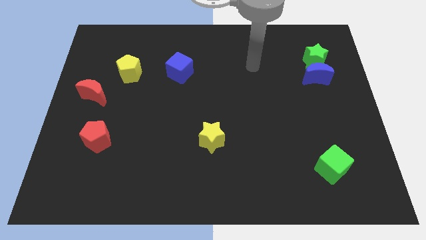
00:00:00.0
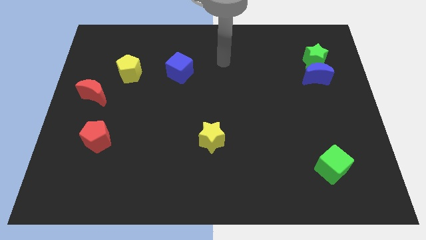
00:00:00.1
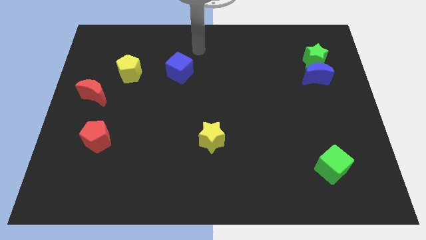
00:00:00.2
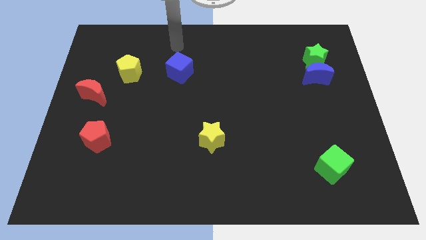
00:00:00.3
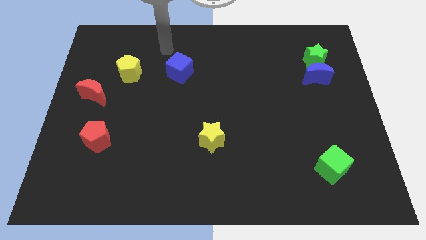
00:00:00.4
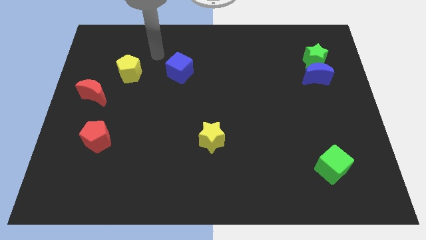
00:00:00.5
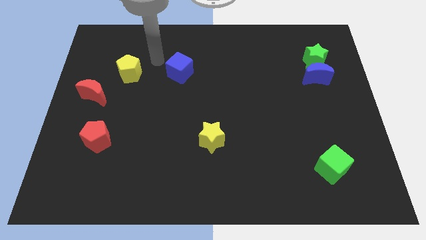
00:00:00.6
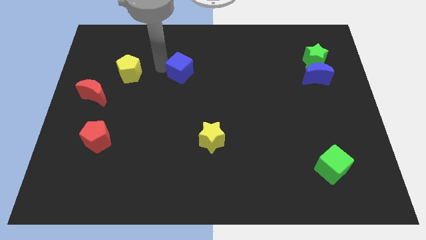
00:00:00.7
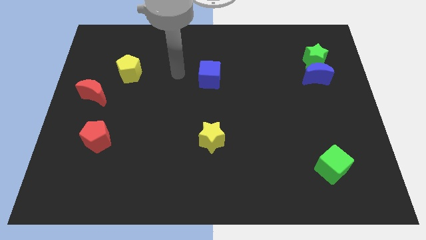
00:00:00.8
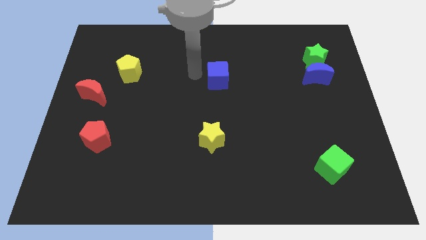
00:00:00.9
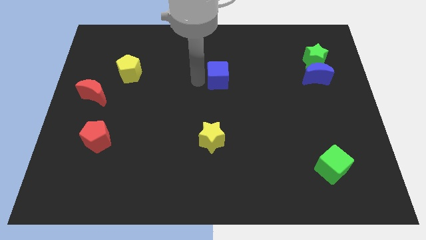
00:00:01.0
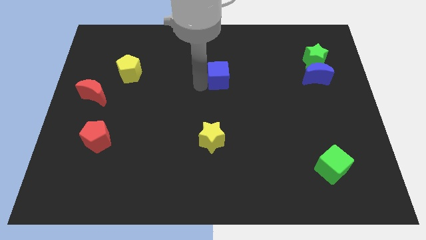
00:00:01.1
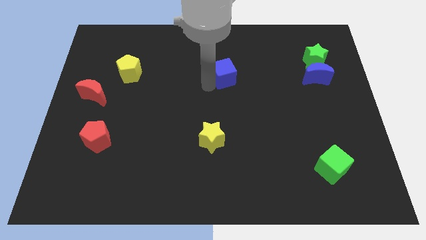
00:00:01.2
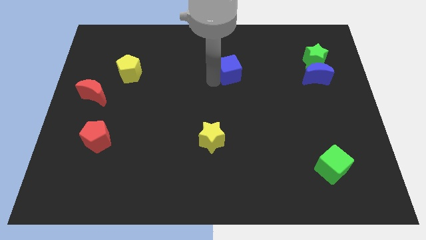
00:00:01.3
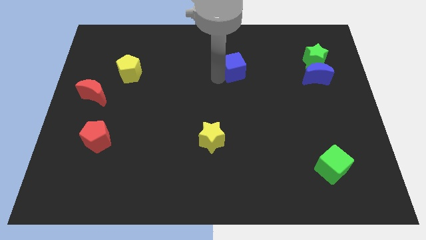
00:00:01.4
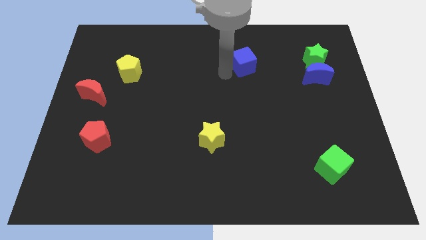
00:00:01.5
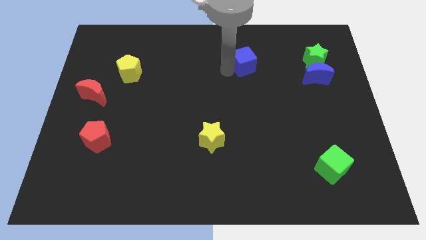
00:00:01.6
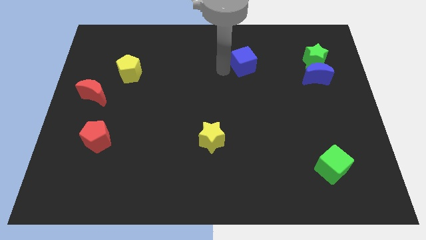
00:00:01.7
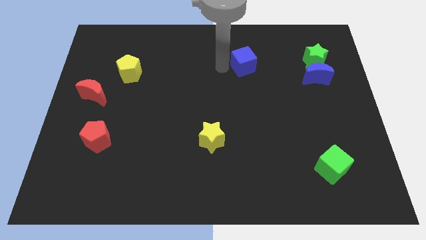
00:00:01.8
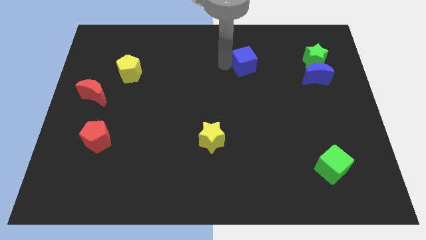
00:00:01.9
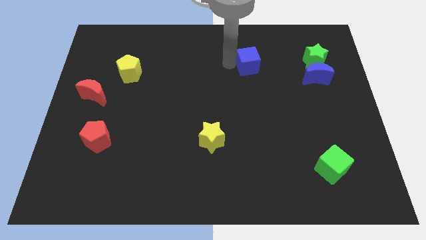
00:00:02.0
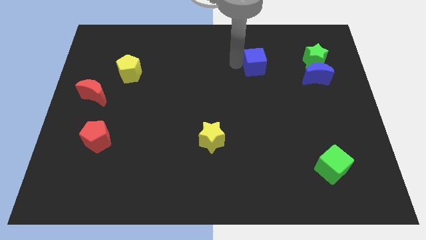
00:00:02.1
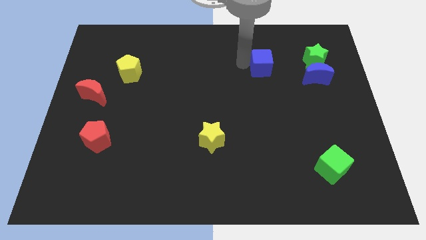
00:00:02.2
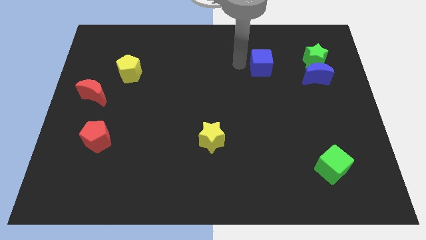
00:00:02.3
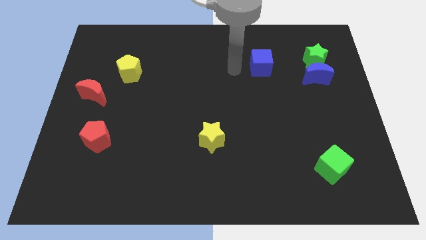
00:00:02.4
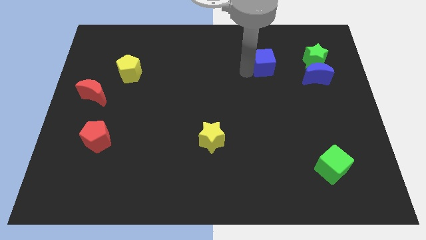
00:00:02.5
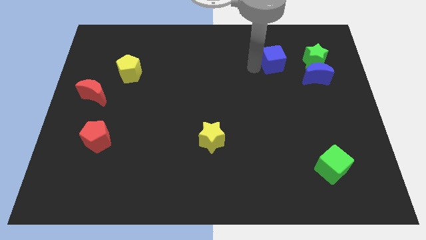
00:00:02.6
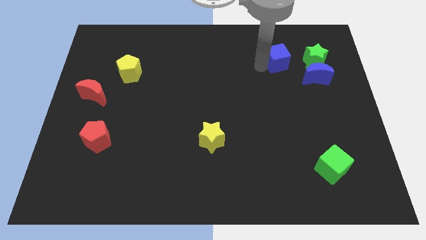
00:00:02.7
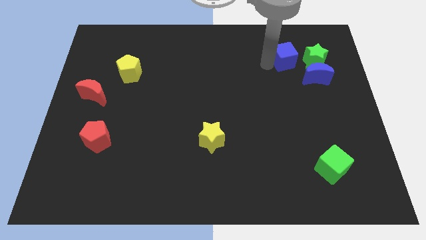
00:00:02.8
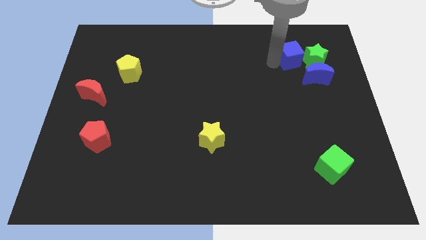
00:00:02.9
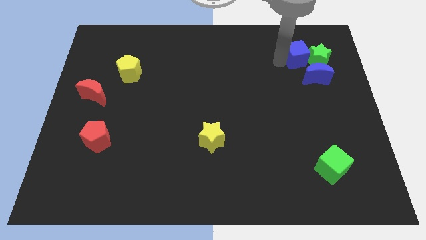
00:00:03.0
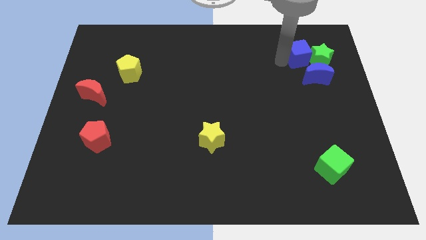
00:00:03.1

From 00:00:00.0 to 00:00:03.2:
move the blue cube next to the green star

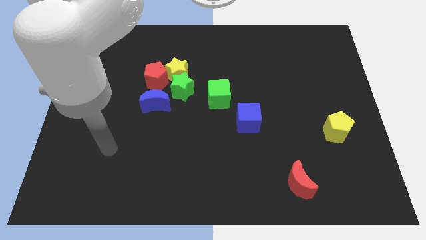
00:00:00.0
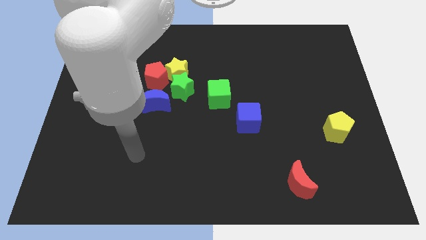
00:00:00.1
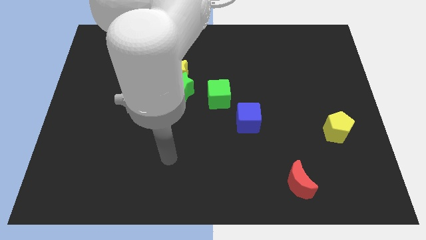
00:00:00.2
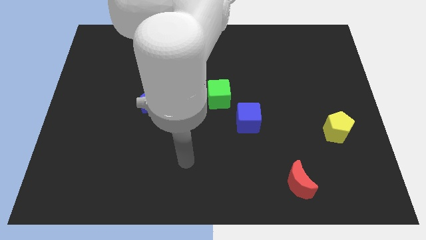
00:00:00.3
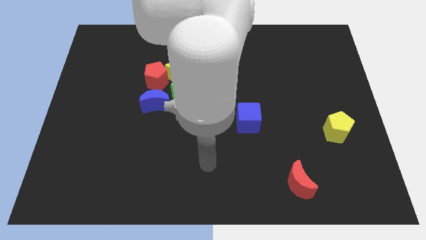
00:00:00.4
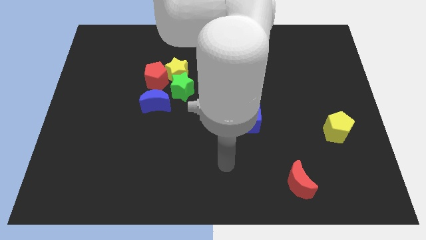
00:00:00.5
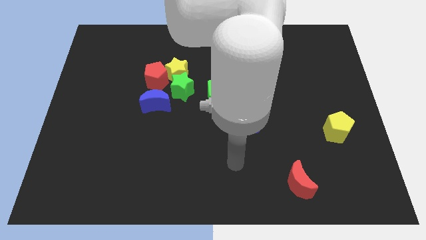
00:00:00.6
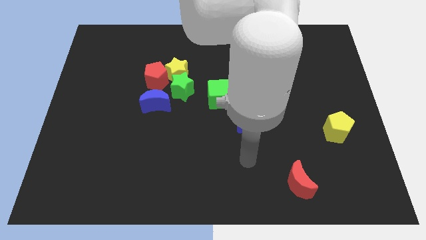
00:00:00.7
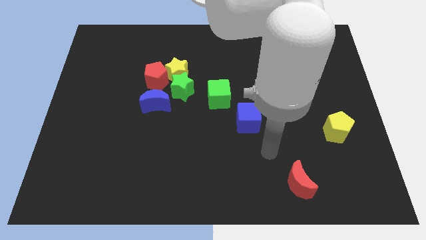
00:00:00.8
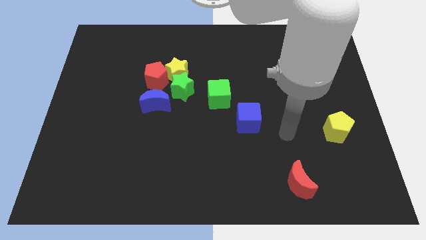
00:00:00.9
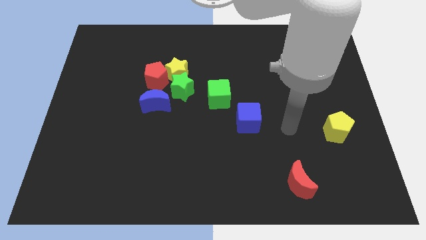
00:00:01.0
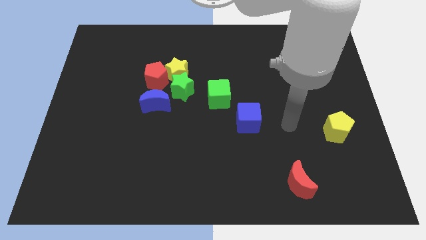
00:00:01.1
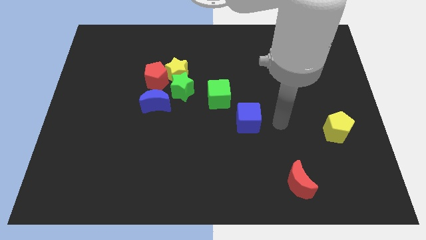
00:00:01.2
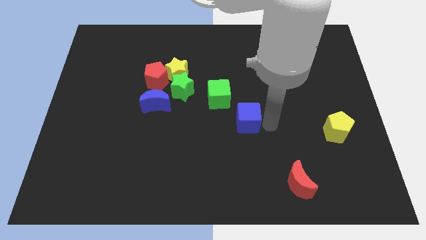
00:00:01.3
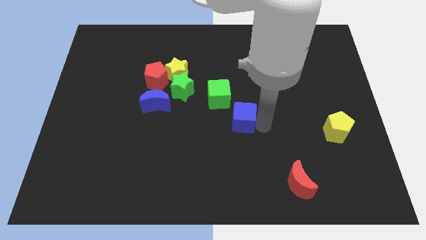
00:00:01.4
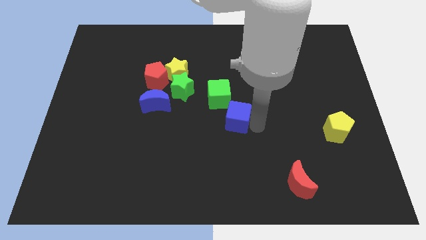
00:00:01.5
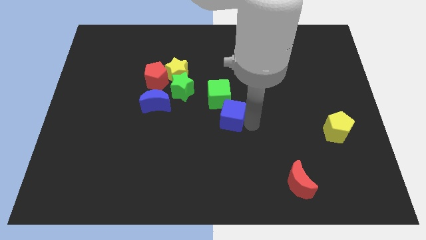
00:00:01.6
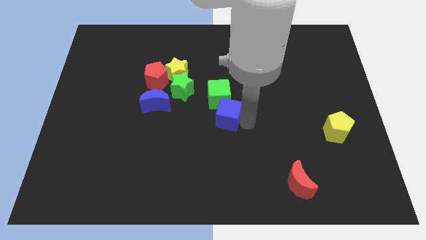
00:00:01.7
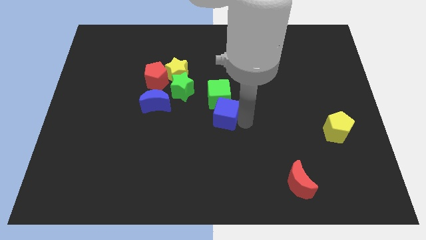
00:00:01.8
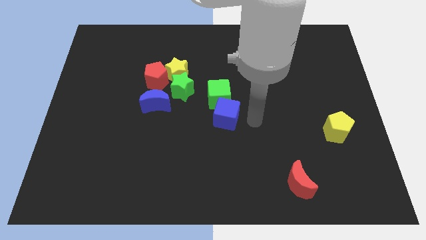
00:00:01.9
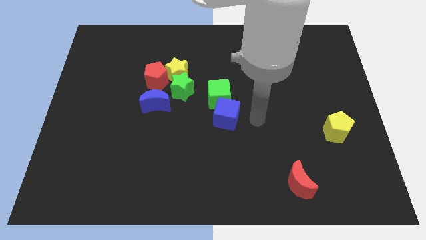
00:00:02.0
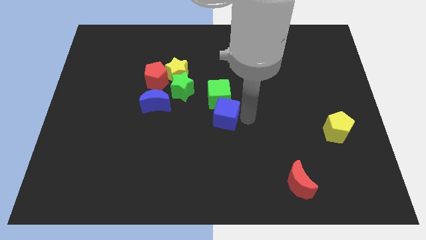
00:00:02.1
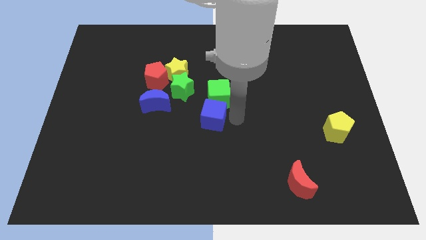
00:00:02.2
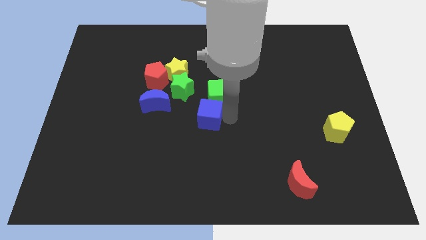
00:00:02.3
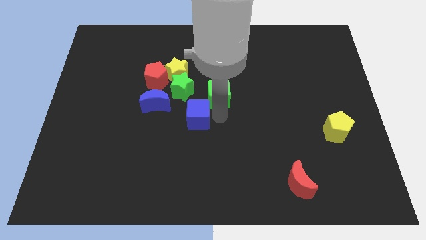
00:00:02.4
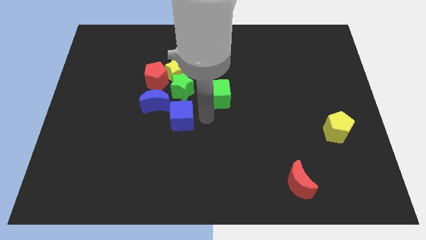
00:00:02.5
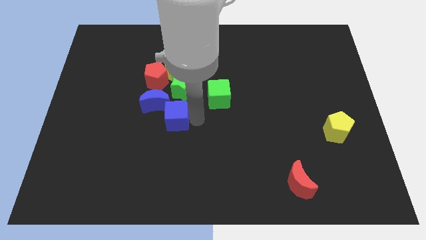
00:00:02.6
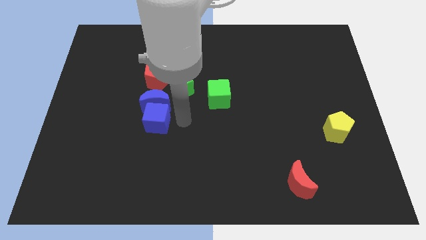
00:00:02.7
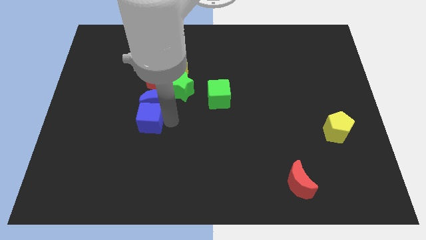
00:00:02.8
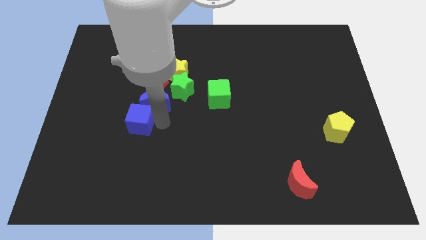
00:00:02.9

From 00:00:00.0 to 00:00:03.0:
move the blue cube close to the blue moon

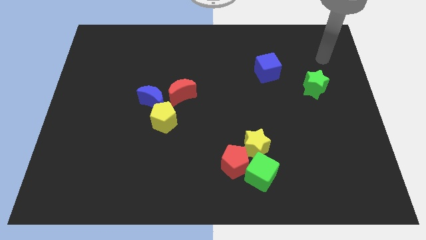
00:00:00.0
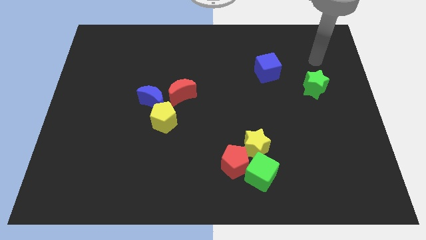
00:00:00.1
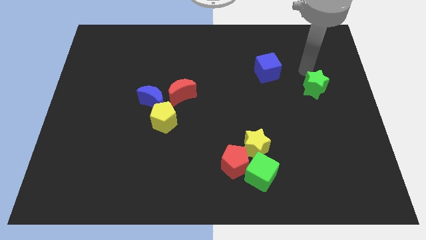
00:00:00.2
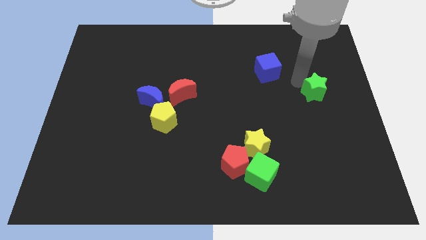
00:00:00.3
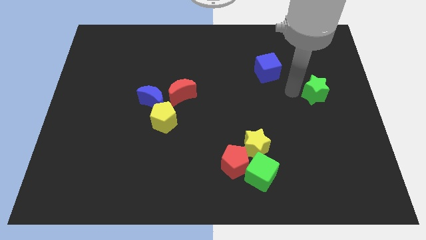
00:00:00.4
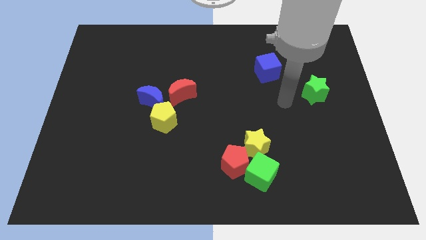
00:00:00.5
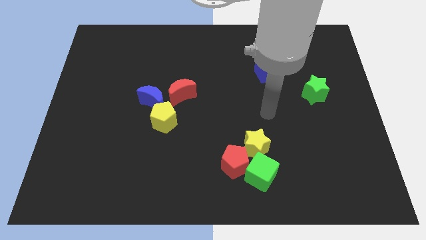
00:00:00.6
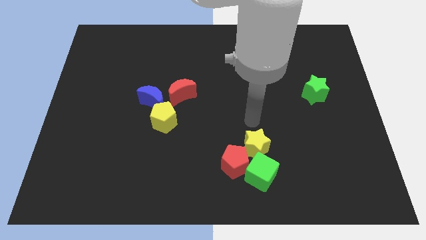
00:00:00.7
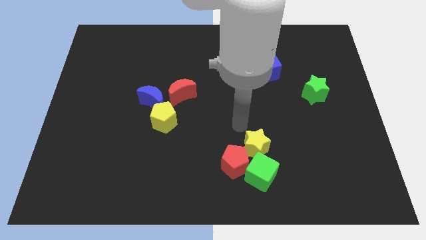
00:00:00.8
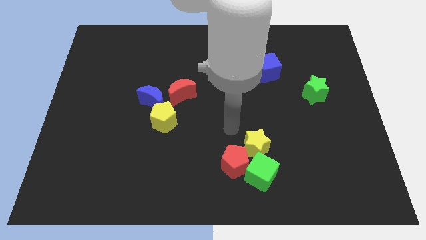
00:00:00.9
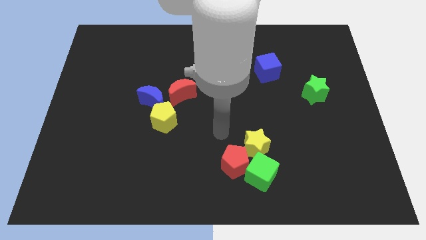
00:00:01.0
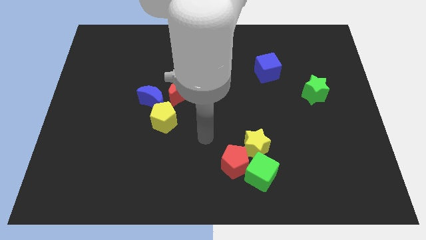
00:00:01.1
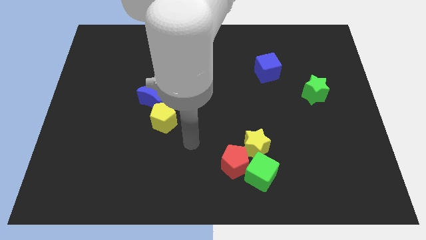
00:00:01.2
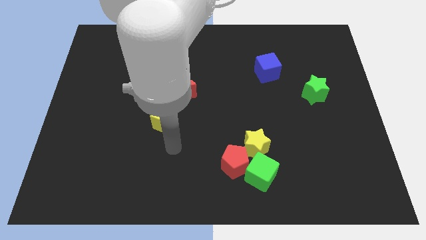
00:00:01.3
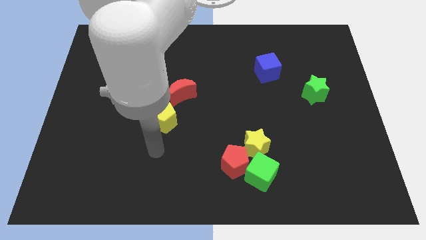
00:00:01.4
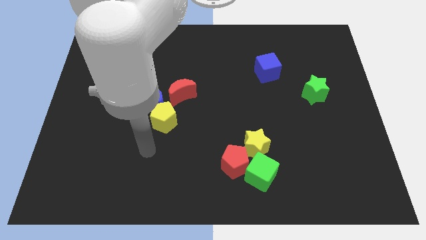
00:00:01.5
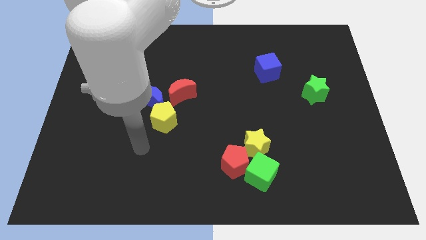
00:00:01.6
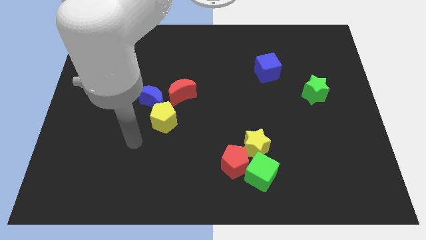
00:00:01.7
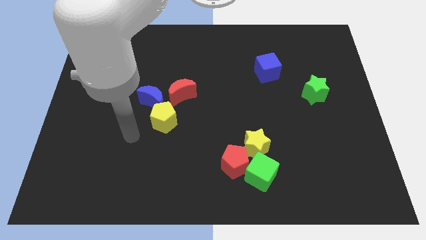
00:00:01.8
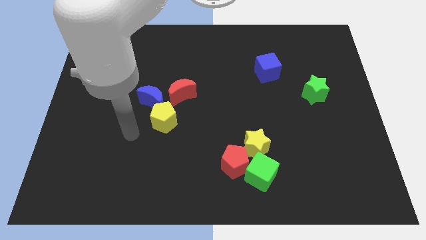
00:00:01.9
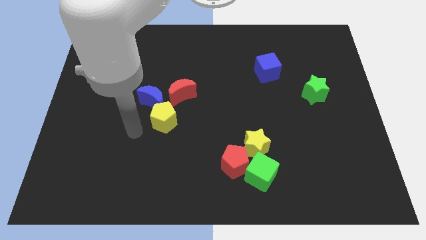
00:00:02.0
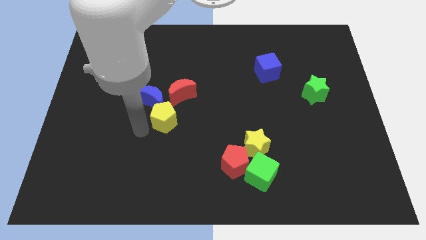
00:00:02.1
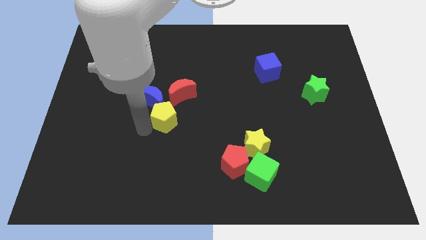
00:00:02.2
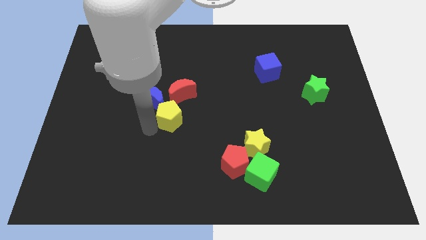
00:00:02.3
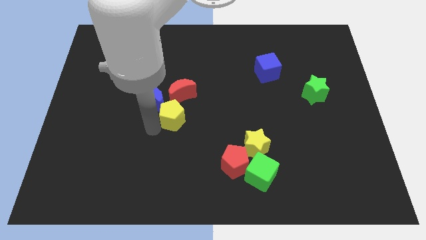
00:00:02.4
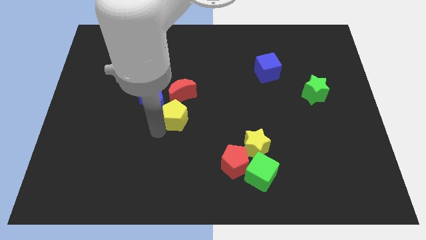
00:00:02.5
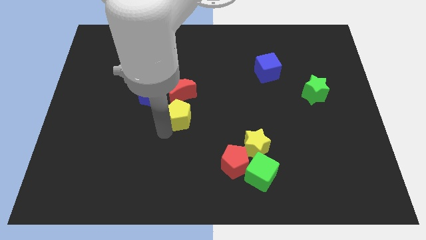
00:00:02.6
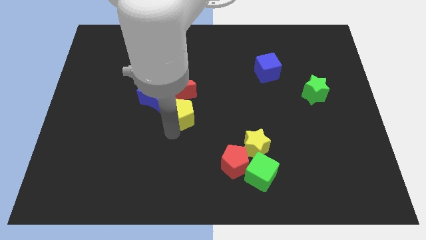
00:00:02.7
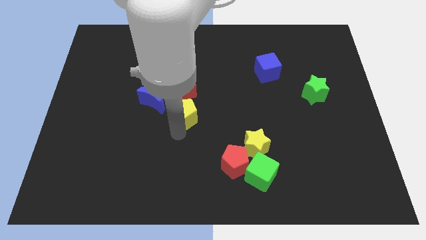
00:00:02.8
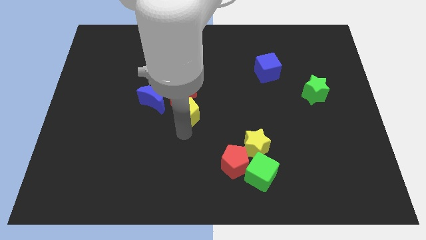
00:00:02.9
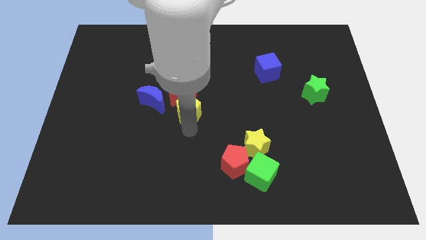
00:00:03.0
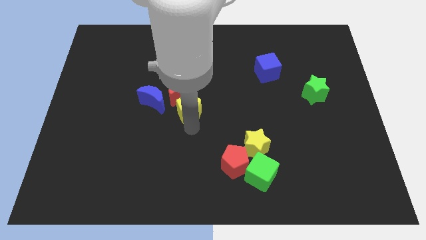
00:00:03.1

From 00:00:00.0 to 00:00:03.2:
move the yellow pentagon close to the red moon
